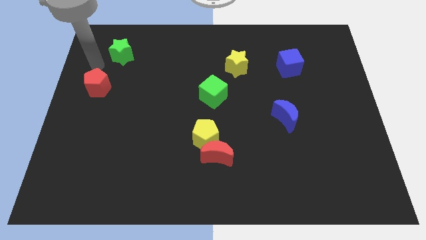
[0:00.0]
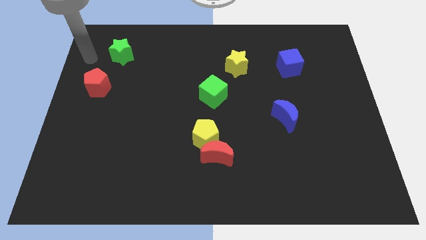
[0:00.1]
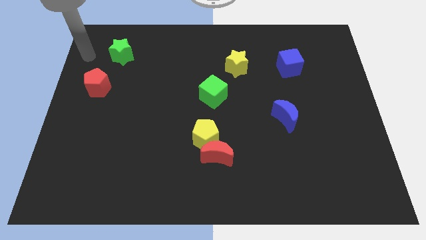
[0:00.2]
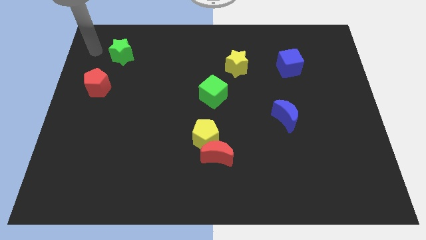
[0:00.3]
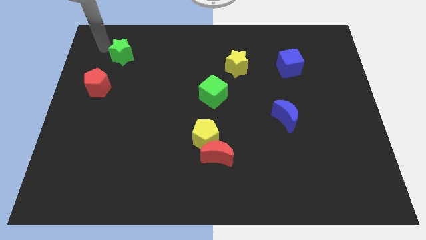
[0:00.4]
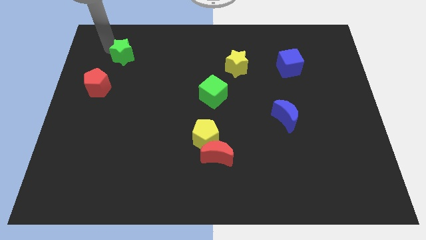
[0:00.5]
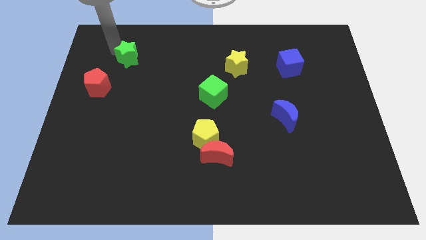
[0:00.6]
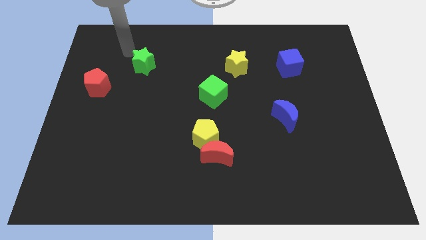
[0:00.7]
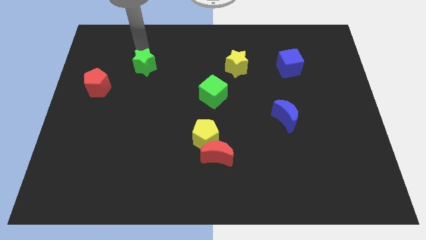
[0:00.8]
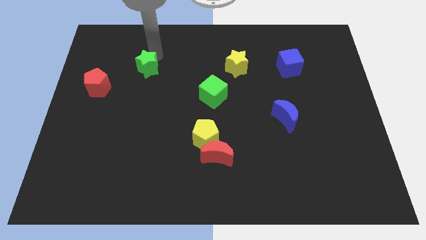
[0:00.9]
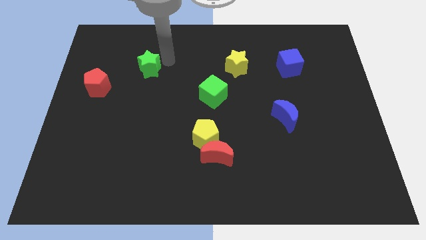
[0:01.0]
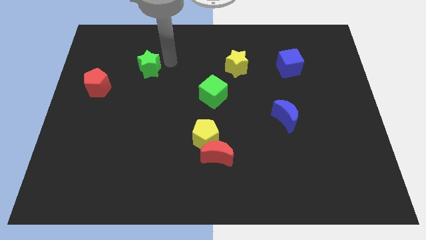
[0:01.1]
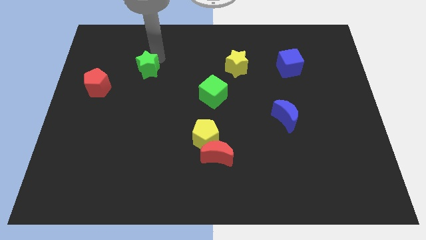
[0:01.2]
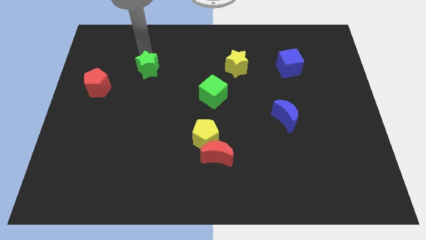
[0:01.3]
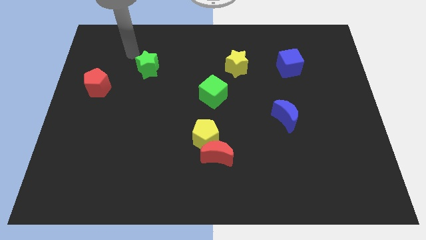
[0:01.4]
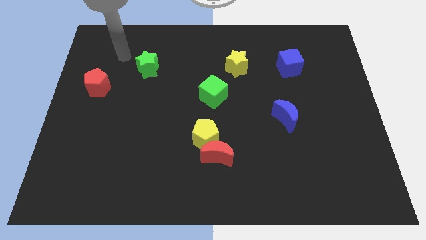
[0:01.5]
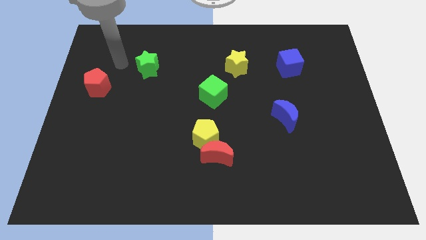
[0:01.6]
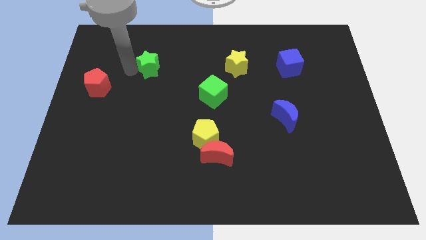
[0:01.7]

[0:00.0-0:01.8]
push the green star diagonal left of green cube

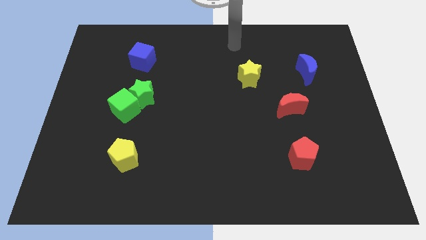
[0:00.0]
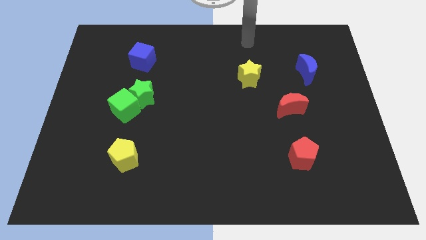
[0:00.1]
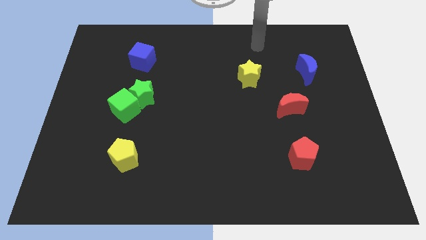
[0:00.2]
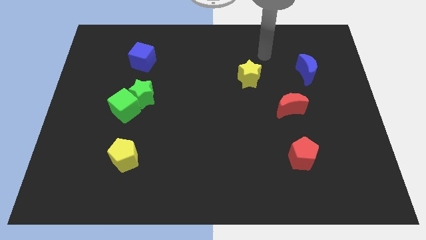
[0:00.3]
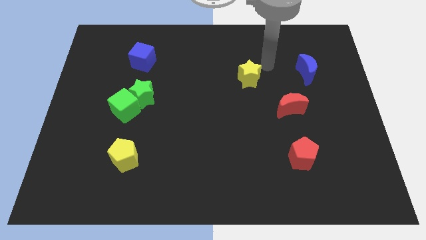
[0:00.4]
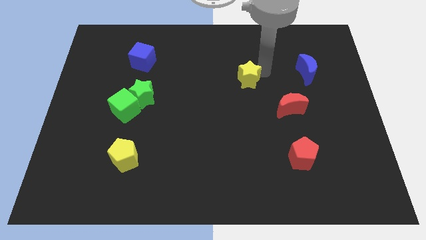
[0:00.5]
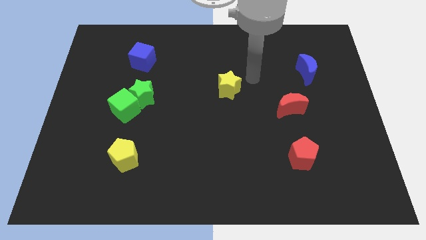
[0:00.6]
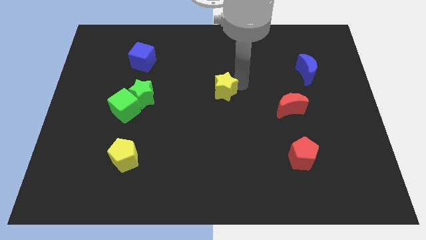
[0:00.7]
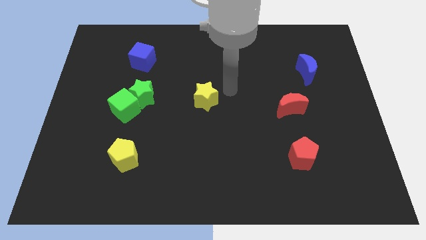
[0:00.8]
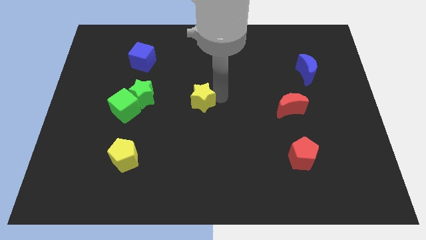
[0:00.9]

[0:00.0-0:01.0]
place the yellow star diagonally at the top right side of the yellow pentagon

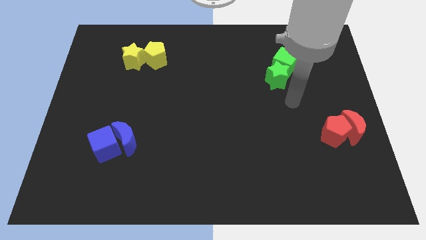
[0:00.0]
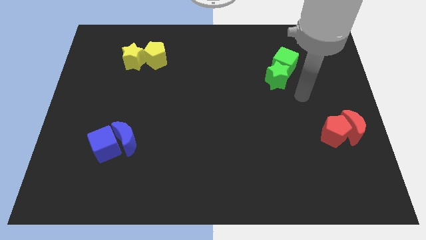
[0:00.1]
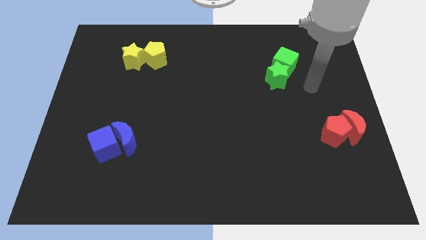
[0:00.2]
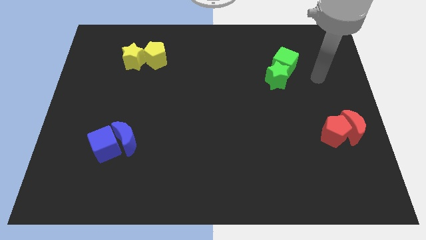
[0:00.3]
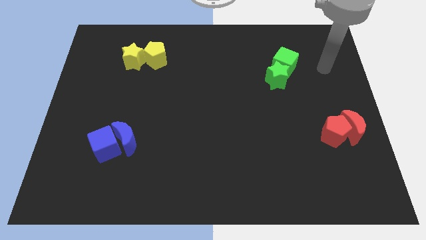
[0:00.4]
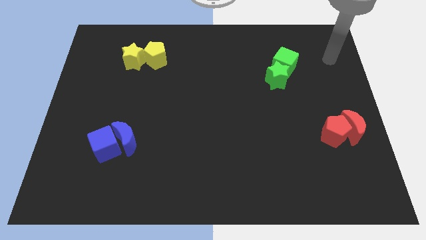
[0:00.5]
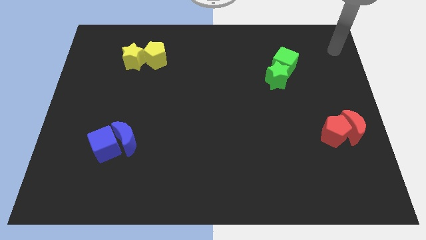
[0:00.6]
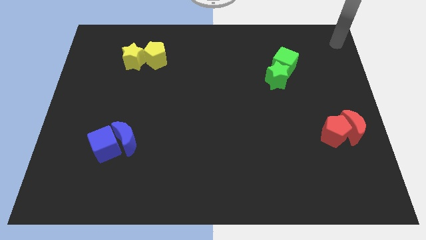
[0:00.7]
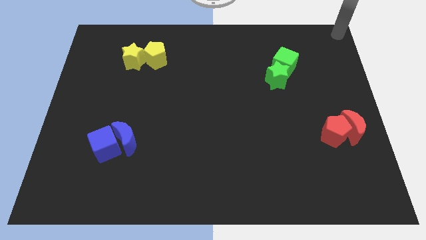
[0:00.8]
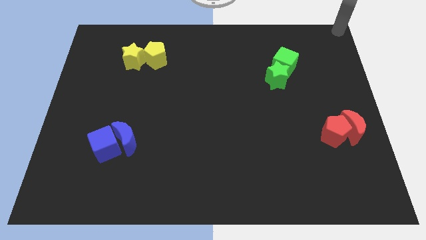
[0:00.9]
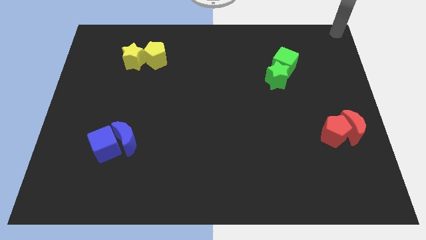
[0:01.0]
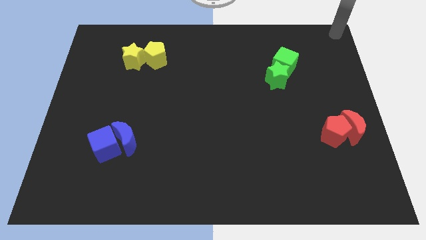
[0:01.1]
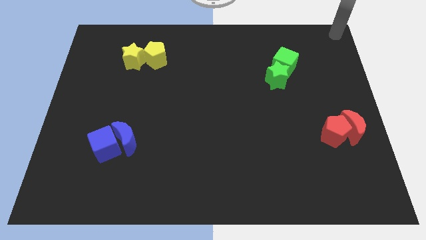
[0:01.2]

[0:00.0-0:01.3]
slide your arm diagonally top right to the green star

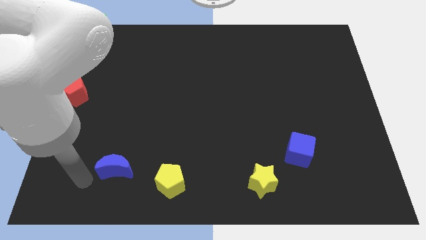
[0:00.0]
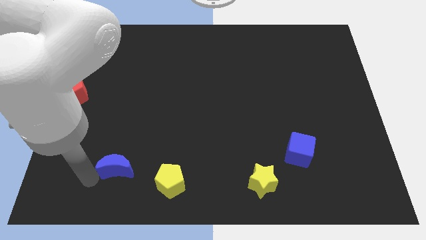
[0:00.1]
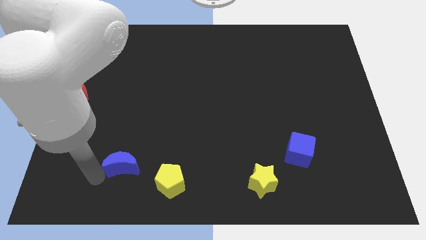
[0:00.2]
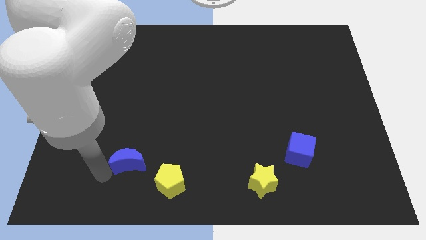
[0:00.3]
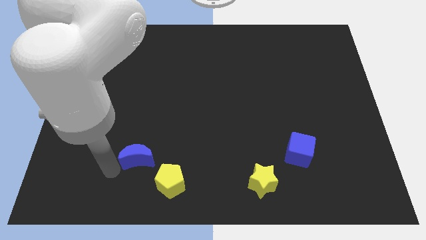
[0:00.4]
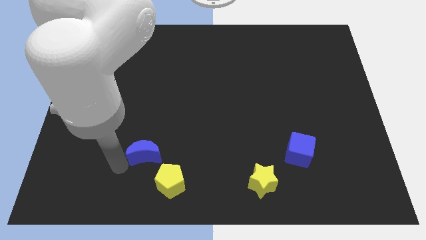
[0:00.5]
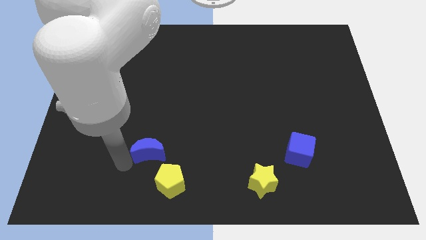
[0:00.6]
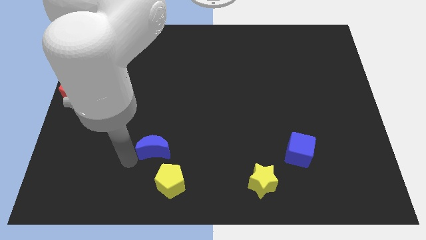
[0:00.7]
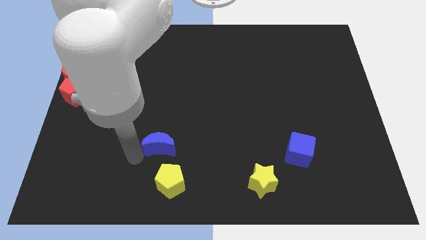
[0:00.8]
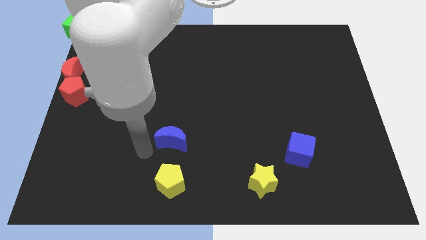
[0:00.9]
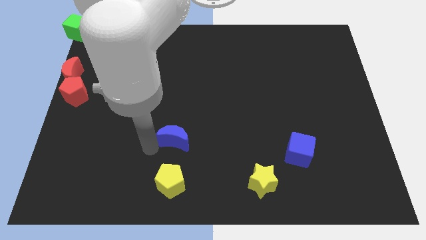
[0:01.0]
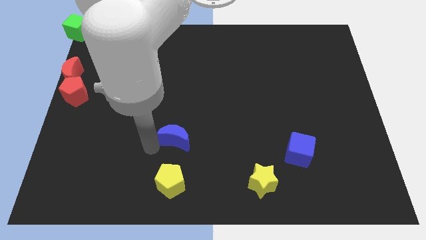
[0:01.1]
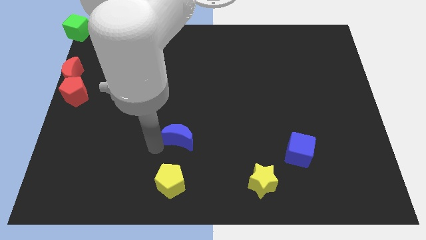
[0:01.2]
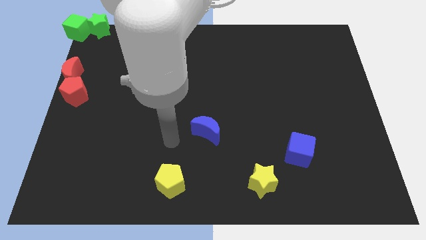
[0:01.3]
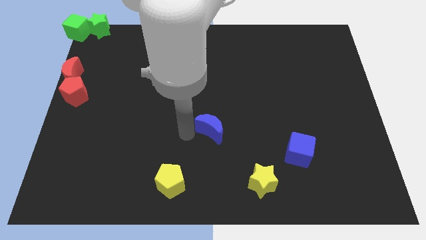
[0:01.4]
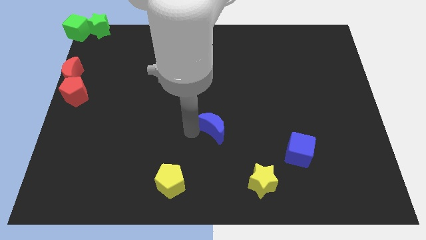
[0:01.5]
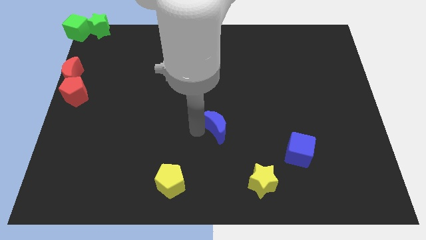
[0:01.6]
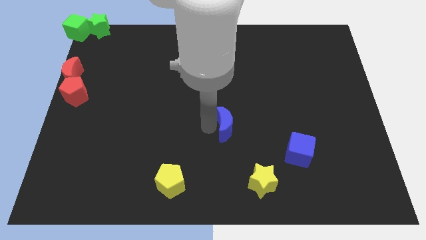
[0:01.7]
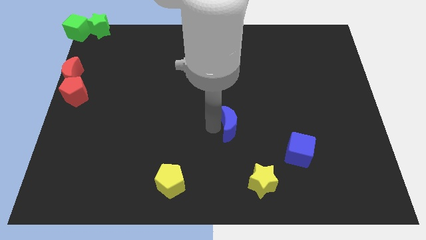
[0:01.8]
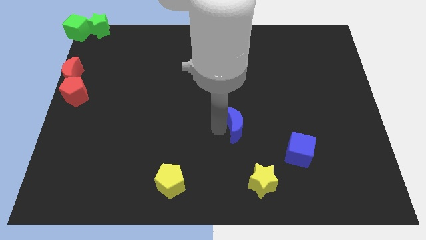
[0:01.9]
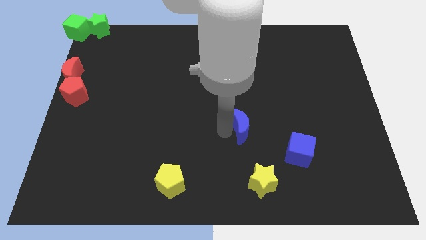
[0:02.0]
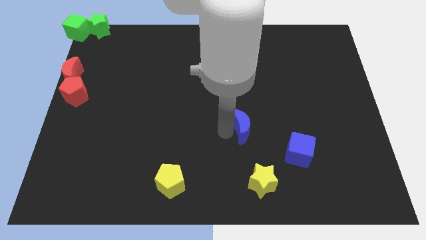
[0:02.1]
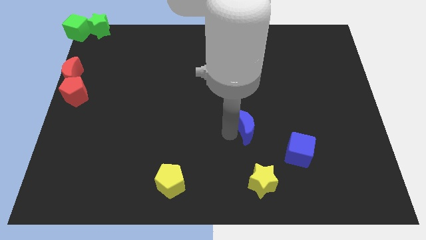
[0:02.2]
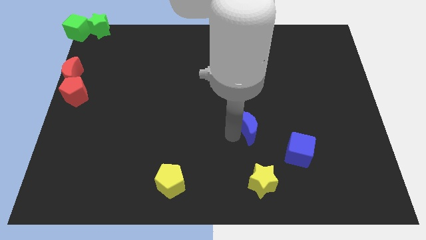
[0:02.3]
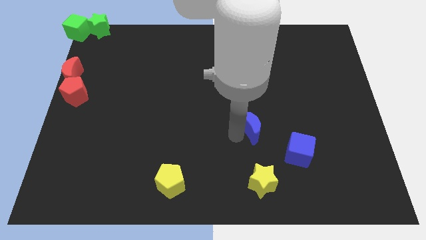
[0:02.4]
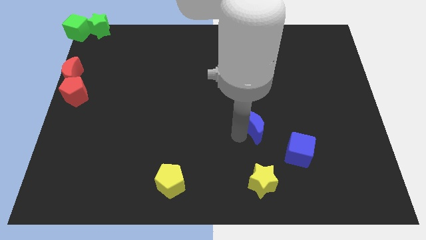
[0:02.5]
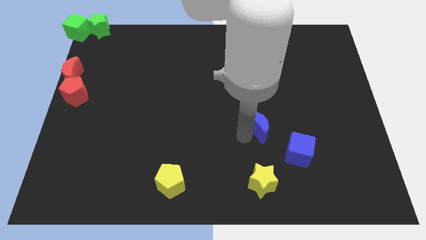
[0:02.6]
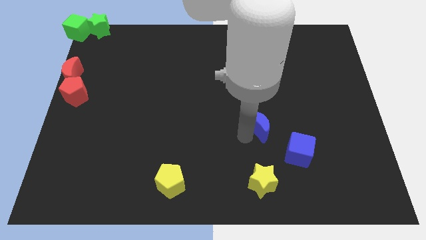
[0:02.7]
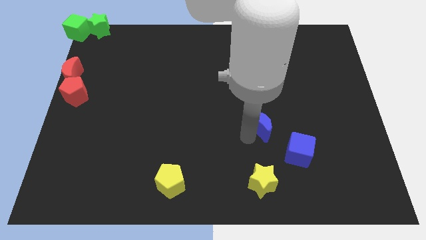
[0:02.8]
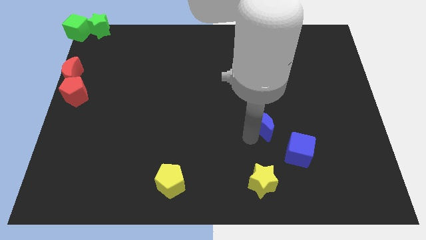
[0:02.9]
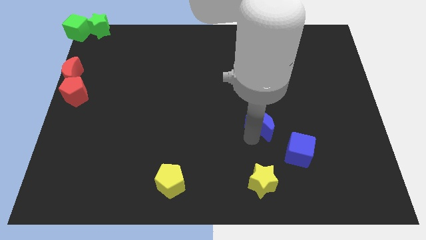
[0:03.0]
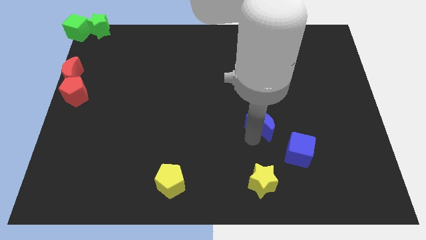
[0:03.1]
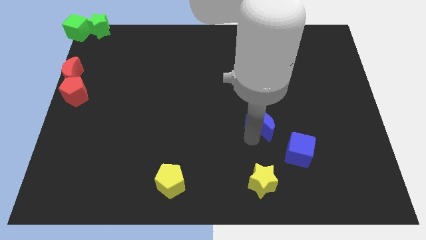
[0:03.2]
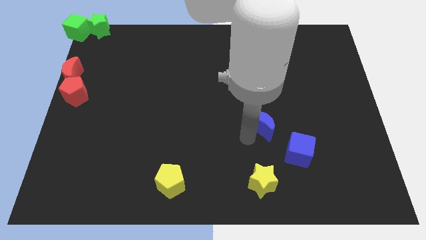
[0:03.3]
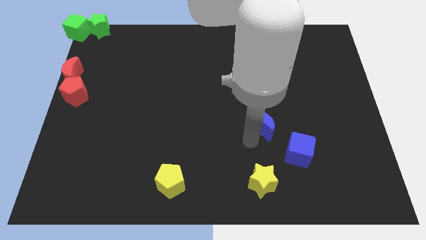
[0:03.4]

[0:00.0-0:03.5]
move the blue crescent towards the top of the yellow star

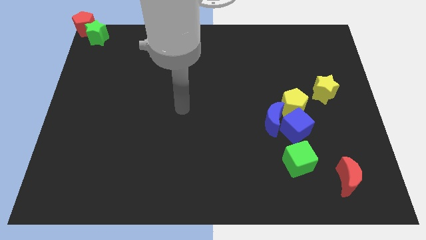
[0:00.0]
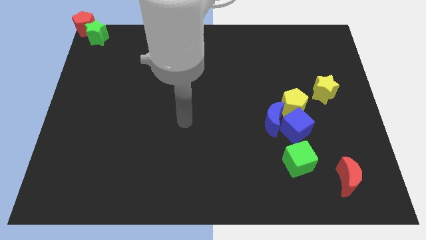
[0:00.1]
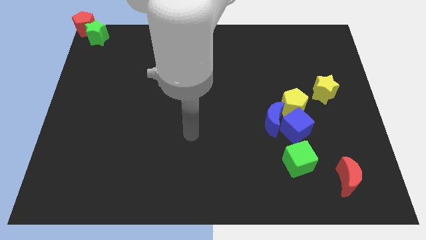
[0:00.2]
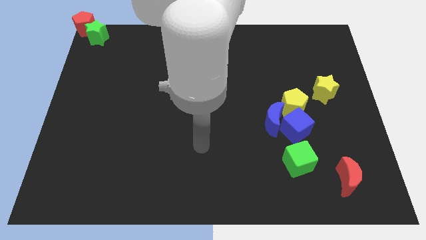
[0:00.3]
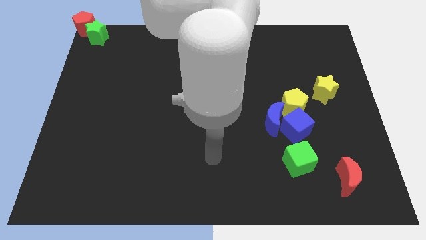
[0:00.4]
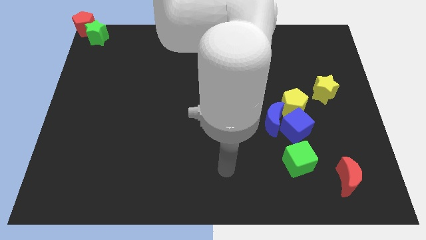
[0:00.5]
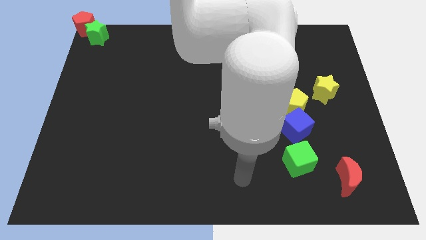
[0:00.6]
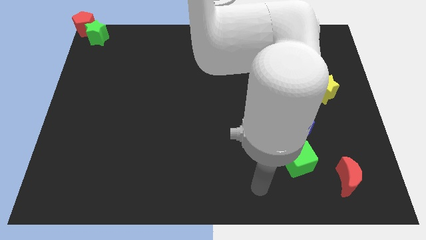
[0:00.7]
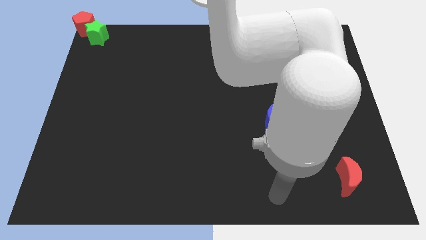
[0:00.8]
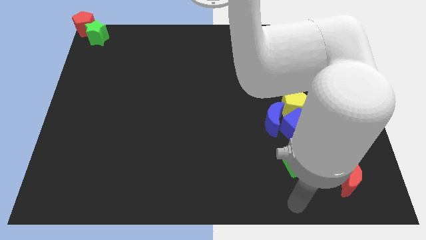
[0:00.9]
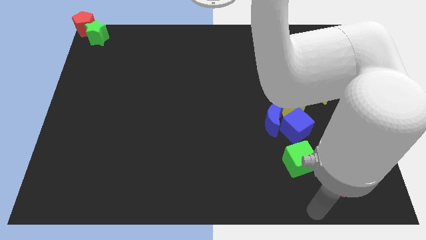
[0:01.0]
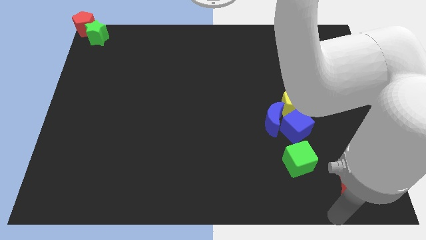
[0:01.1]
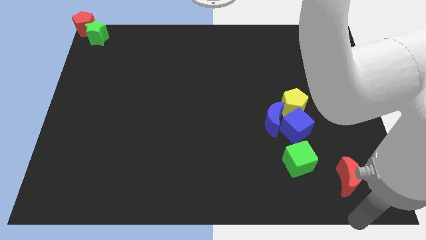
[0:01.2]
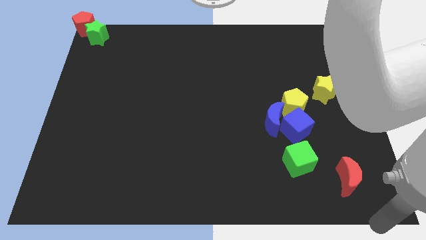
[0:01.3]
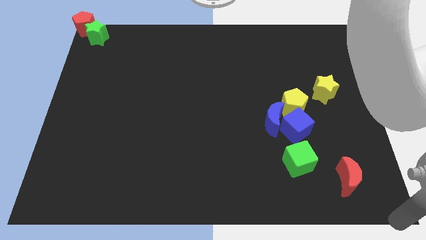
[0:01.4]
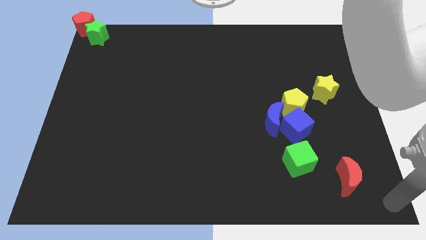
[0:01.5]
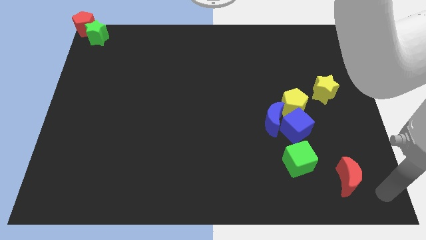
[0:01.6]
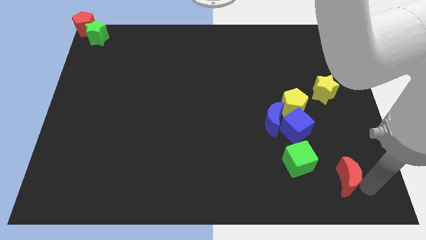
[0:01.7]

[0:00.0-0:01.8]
place your arm at the right of the red crescent
